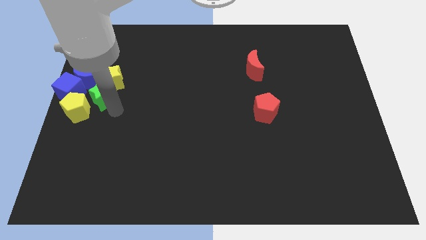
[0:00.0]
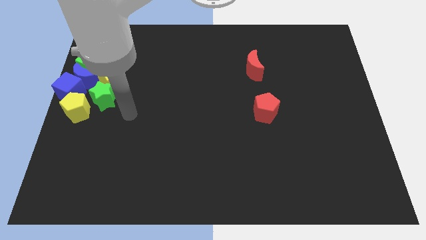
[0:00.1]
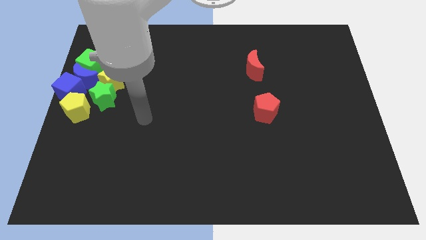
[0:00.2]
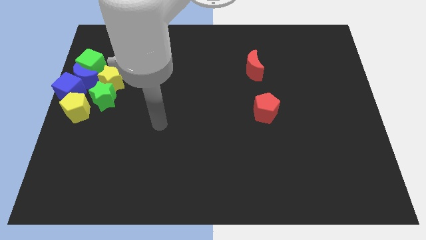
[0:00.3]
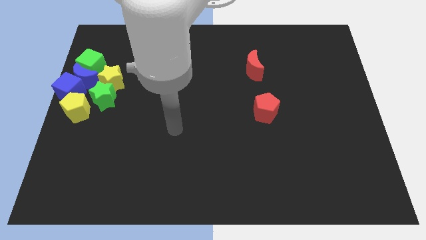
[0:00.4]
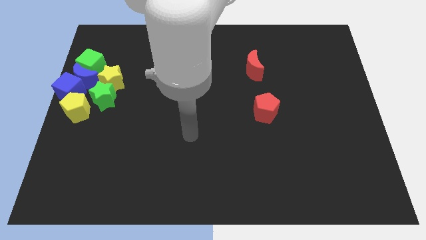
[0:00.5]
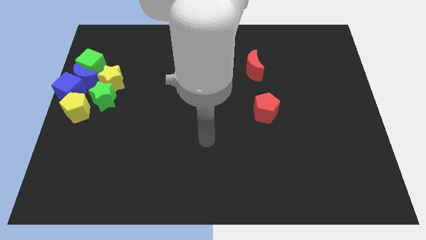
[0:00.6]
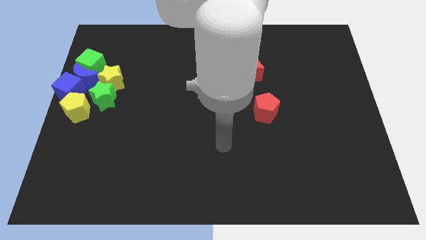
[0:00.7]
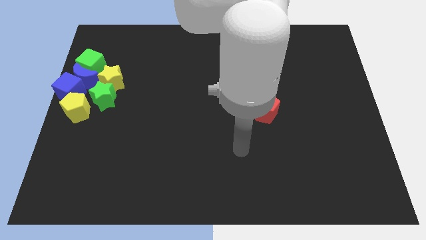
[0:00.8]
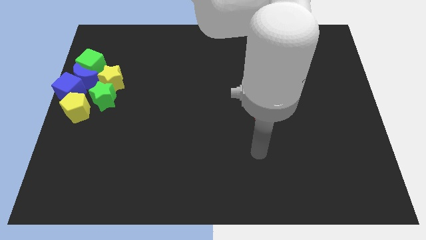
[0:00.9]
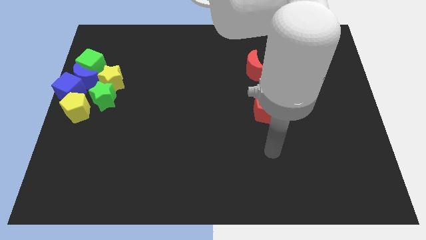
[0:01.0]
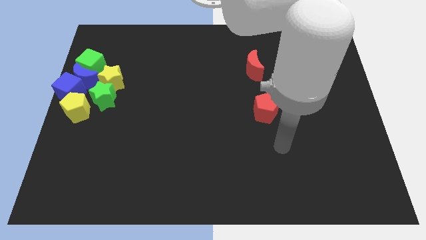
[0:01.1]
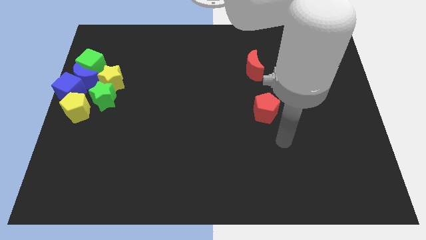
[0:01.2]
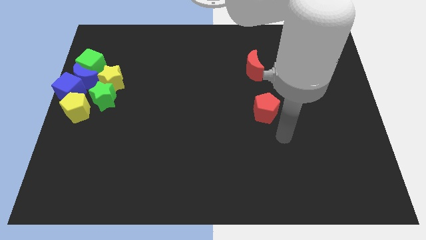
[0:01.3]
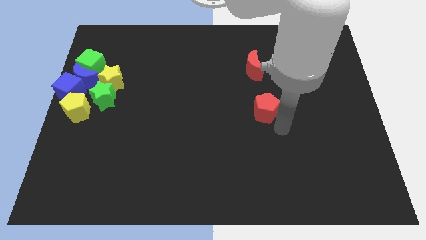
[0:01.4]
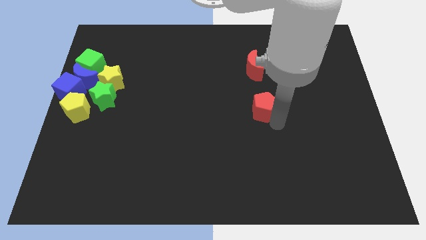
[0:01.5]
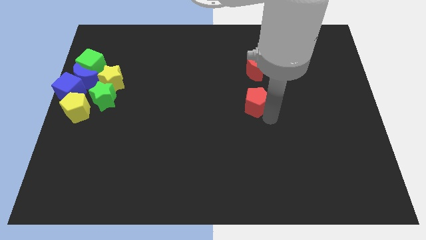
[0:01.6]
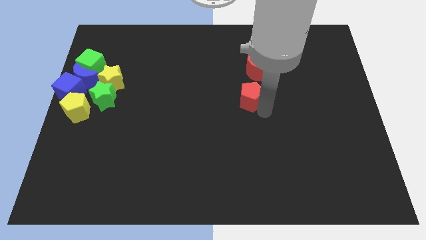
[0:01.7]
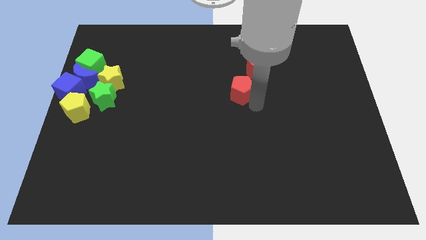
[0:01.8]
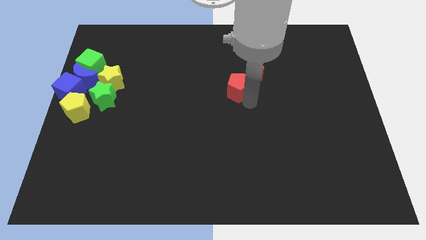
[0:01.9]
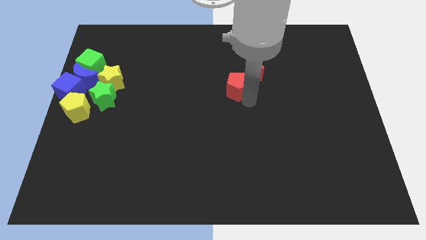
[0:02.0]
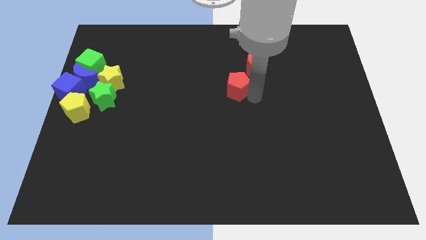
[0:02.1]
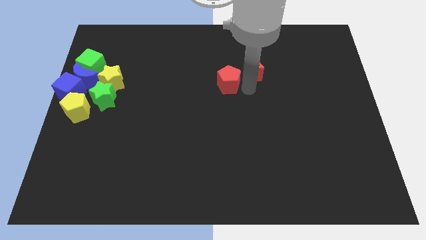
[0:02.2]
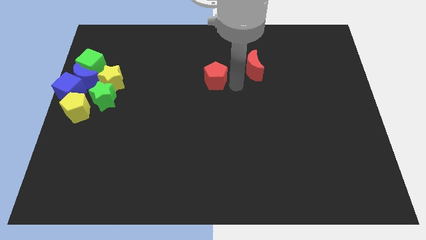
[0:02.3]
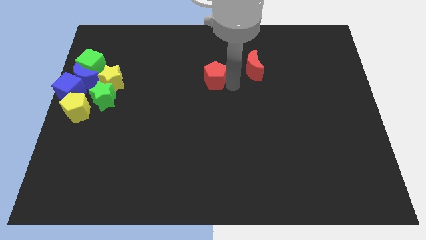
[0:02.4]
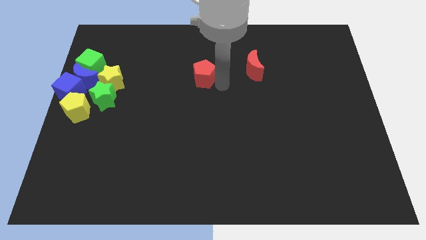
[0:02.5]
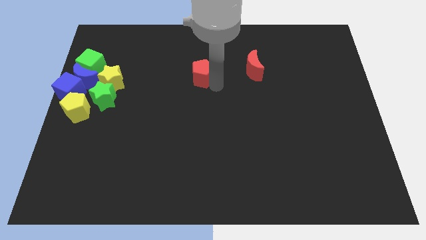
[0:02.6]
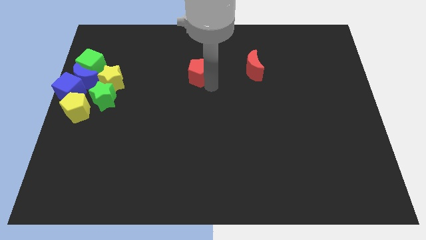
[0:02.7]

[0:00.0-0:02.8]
move the arm away from the green star

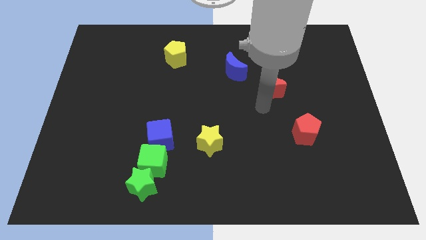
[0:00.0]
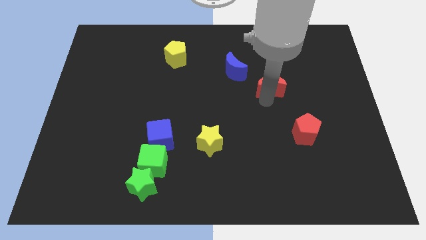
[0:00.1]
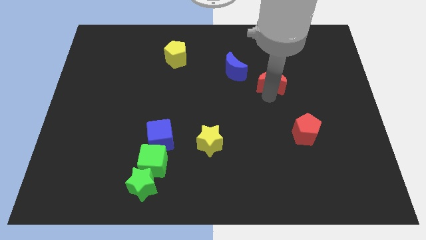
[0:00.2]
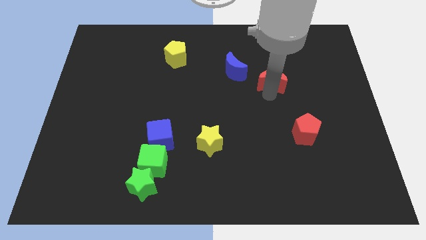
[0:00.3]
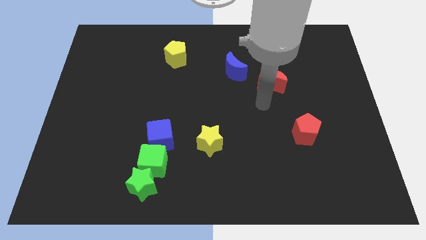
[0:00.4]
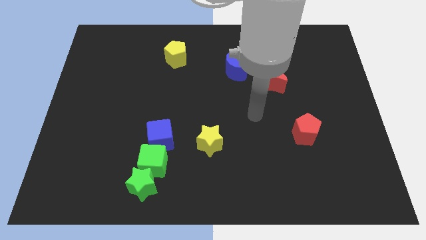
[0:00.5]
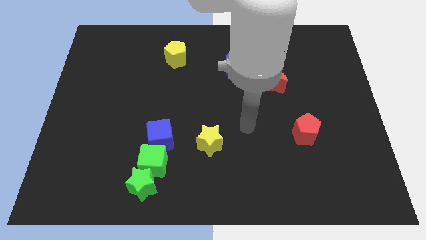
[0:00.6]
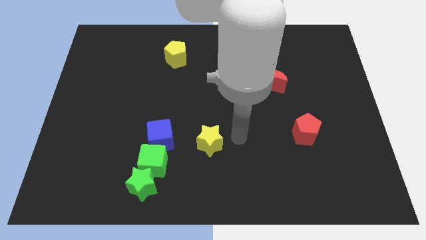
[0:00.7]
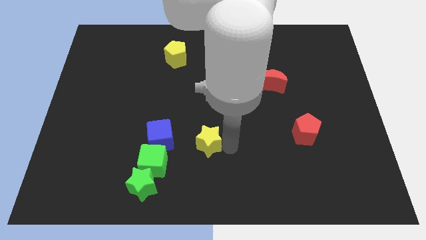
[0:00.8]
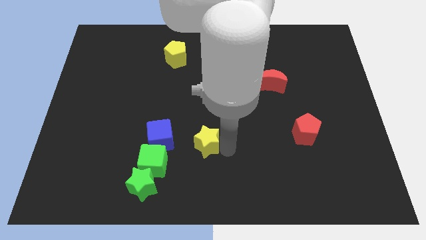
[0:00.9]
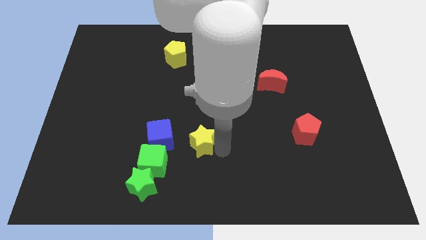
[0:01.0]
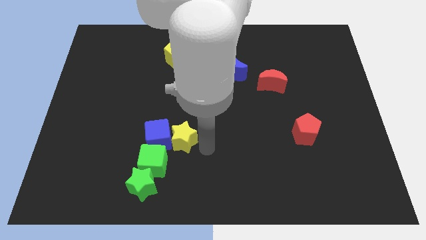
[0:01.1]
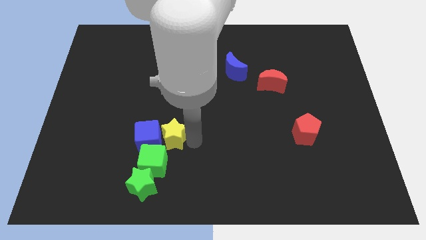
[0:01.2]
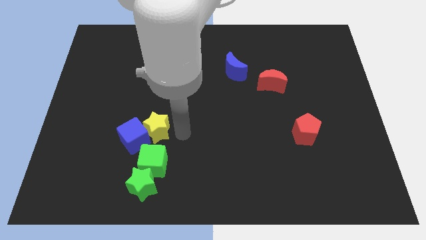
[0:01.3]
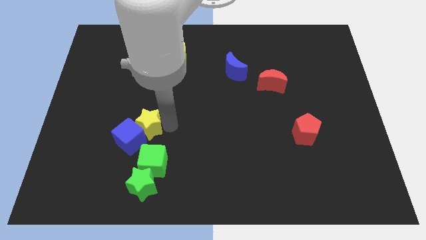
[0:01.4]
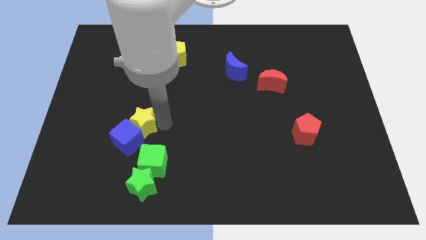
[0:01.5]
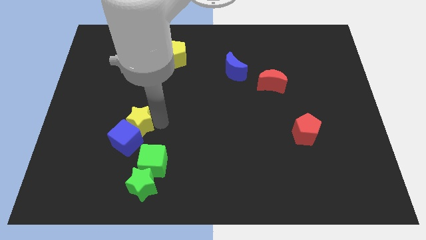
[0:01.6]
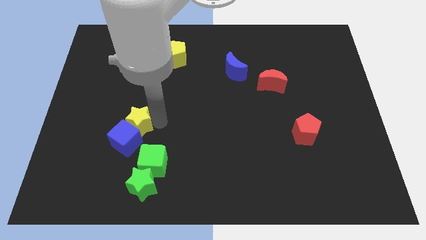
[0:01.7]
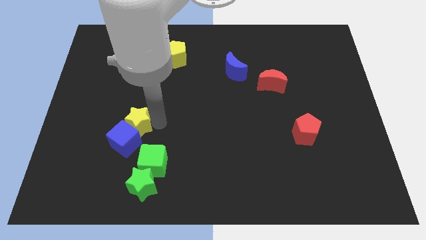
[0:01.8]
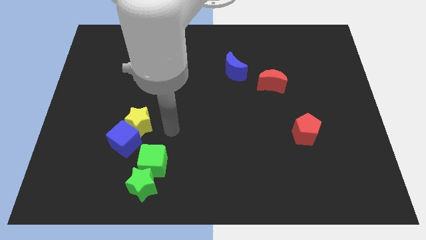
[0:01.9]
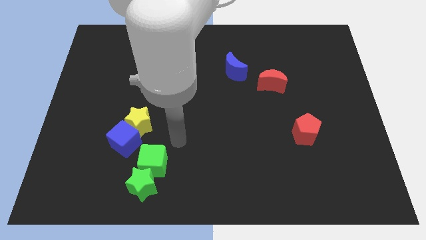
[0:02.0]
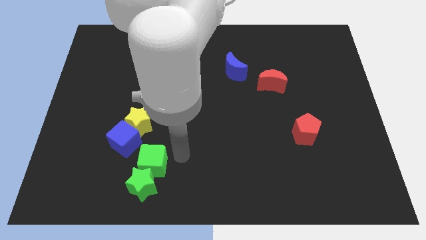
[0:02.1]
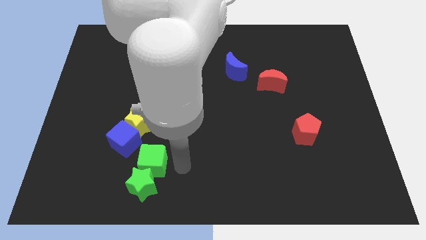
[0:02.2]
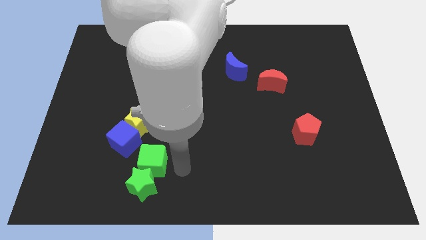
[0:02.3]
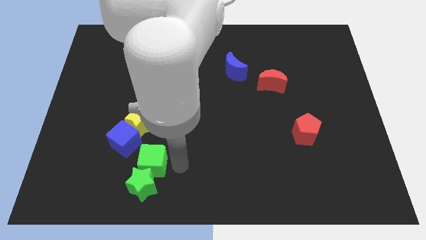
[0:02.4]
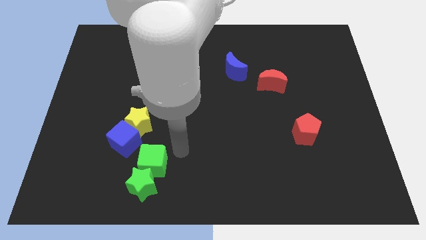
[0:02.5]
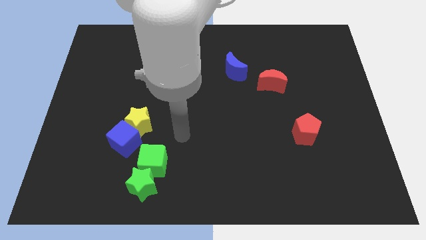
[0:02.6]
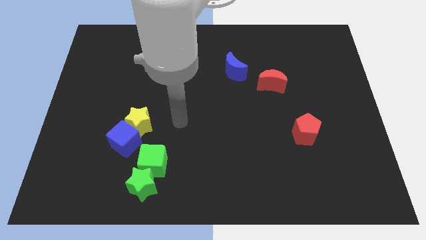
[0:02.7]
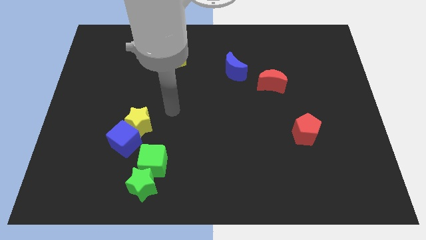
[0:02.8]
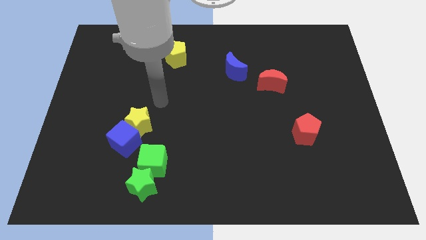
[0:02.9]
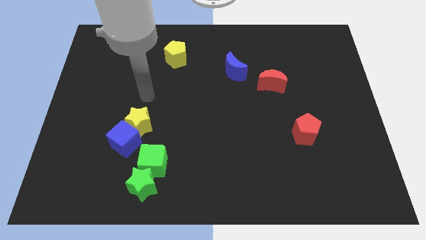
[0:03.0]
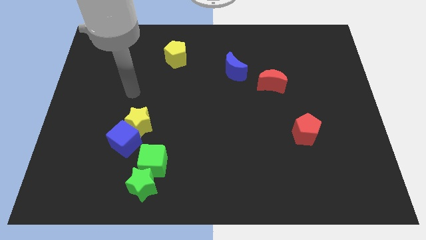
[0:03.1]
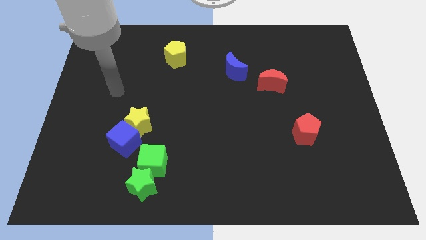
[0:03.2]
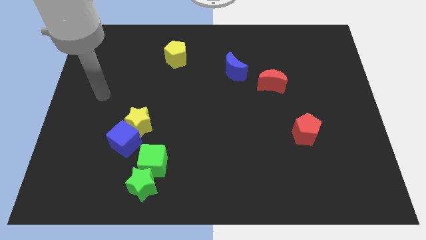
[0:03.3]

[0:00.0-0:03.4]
push the yellow star into the blue cube

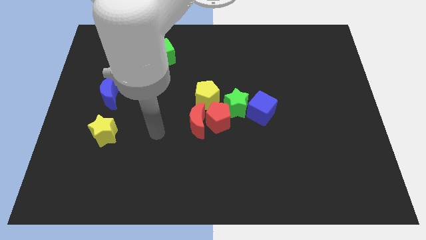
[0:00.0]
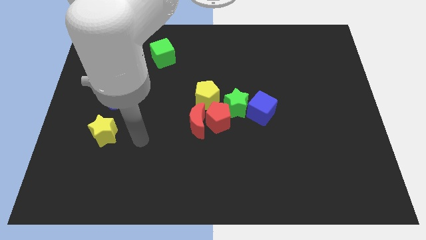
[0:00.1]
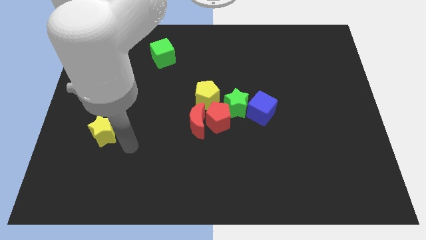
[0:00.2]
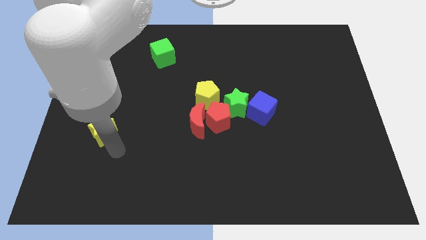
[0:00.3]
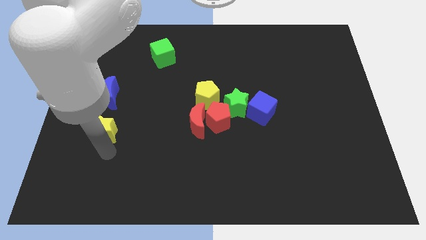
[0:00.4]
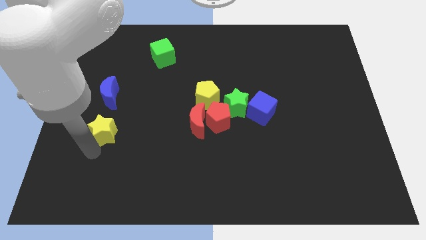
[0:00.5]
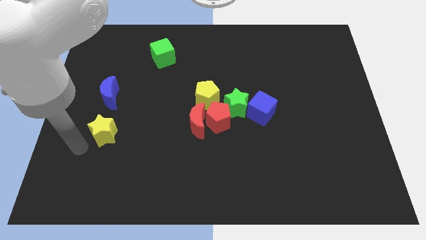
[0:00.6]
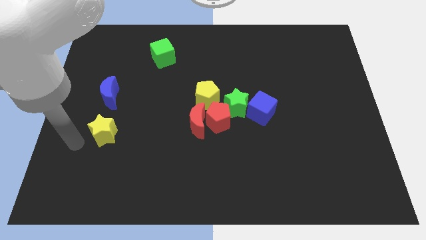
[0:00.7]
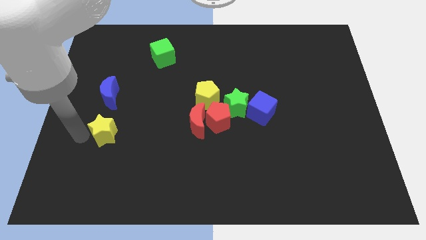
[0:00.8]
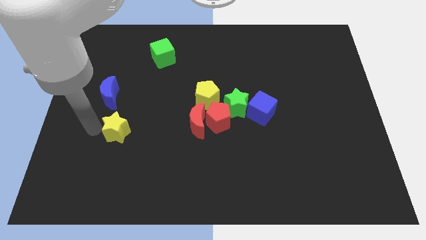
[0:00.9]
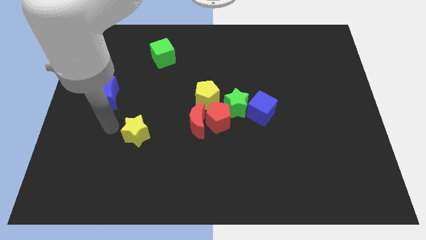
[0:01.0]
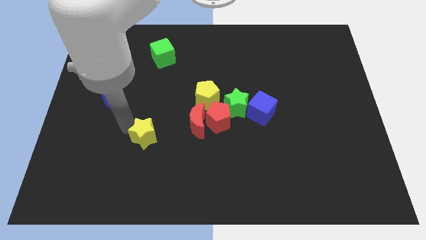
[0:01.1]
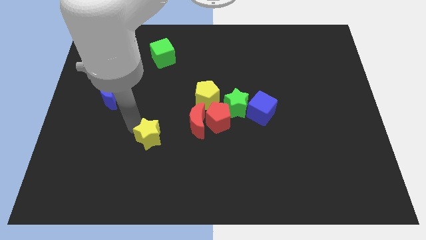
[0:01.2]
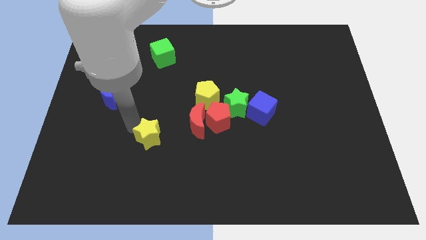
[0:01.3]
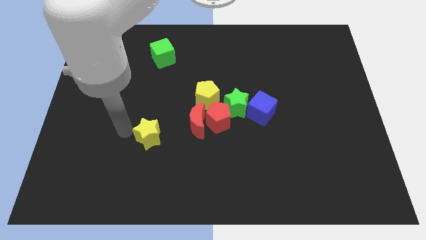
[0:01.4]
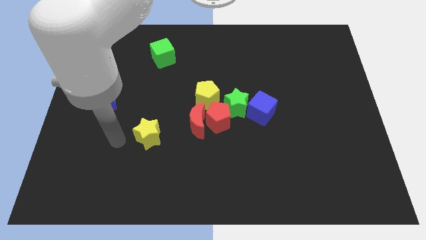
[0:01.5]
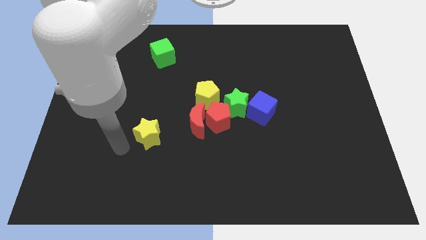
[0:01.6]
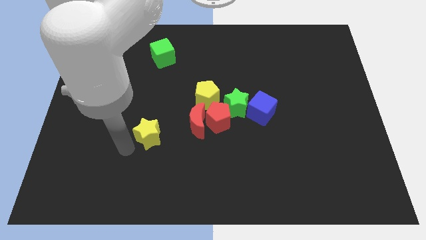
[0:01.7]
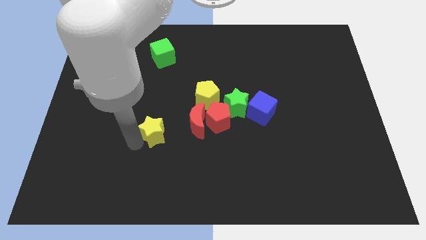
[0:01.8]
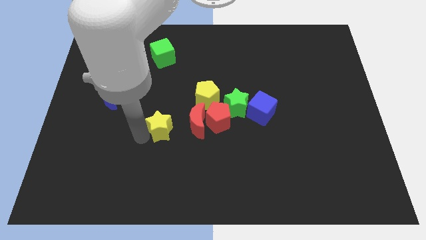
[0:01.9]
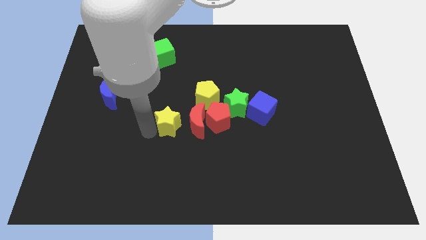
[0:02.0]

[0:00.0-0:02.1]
put the yellow star to the left of red blocks

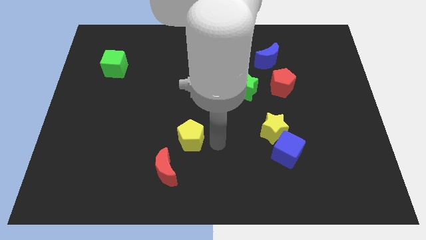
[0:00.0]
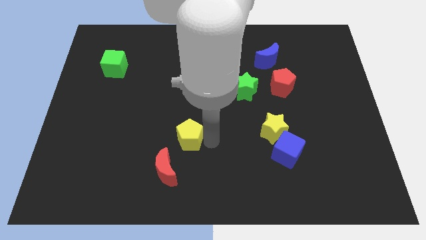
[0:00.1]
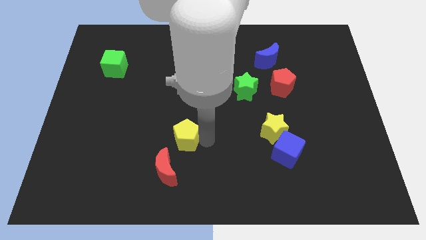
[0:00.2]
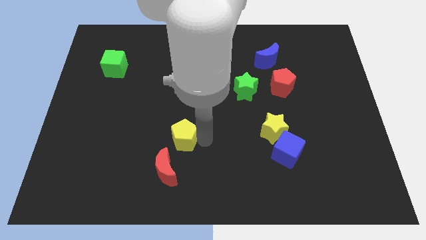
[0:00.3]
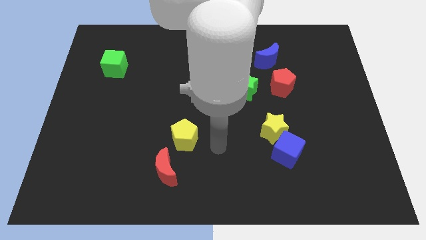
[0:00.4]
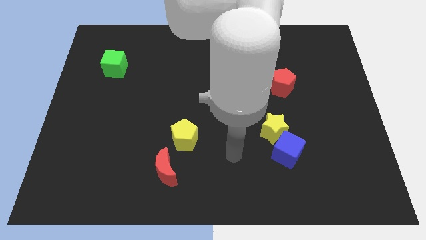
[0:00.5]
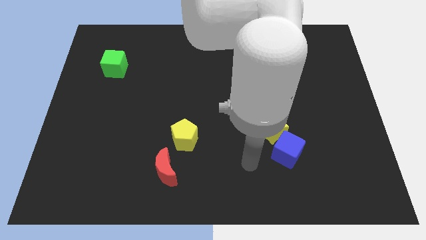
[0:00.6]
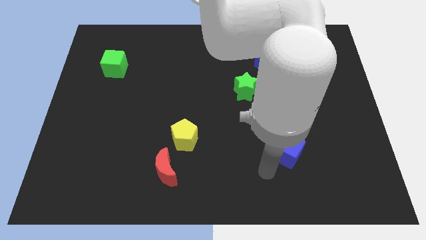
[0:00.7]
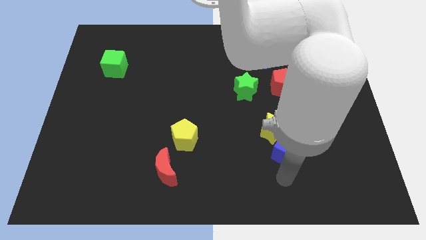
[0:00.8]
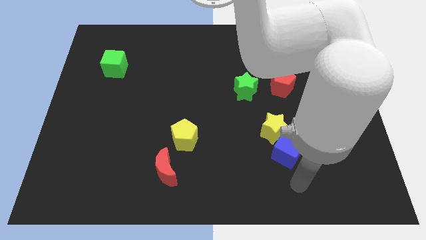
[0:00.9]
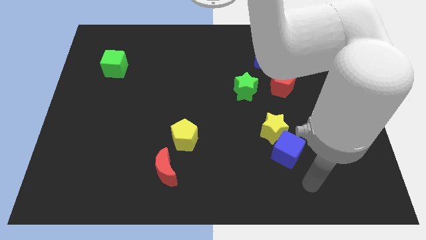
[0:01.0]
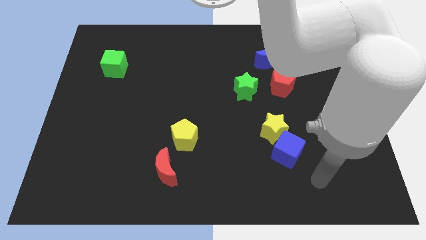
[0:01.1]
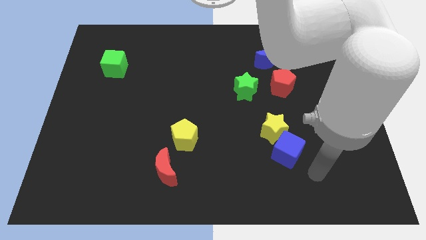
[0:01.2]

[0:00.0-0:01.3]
place the yellow pentagon on the top right of the red moon
